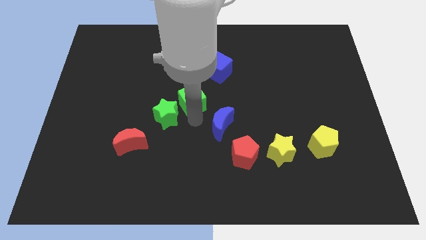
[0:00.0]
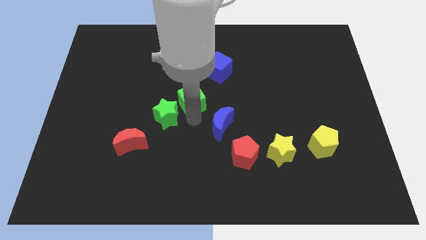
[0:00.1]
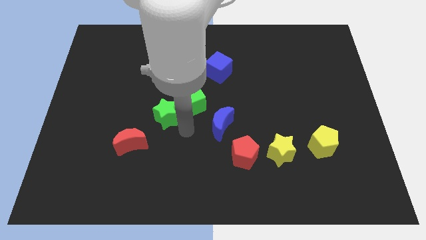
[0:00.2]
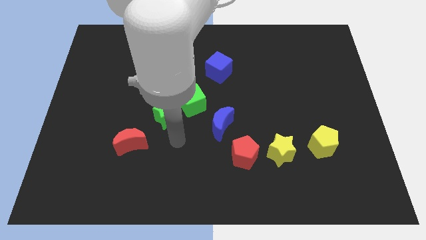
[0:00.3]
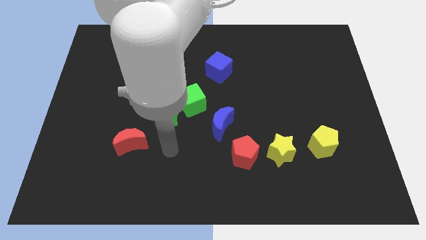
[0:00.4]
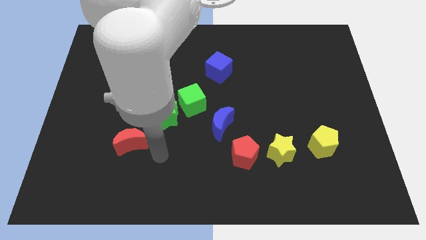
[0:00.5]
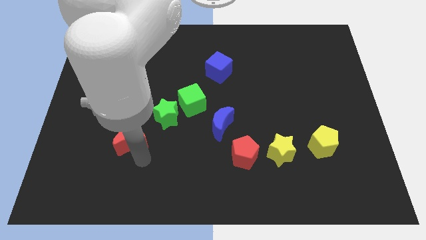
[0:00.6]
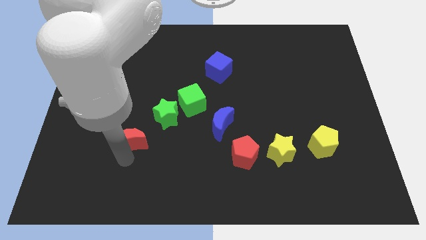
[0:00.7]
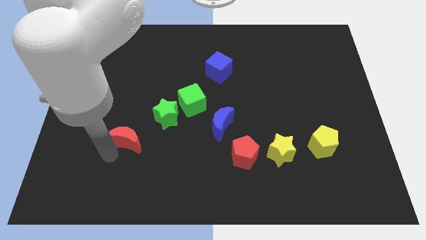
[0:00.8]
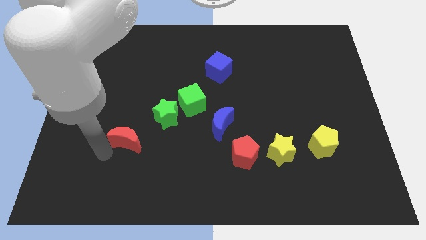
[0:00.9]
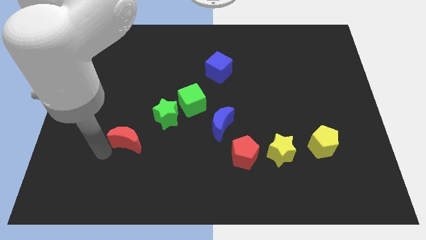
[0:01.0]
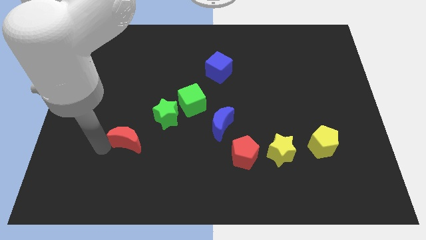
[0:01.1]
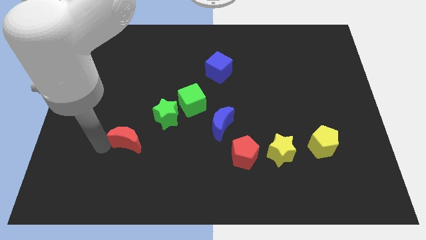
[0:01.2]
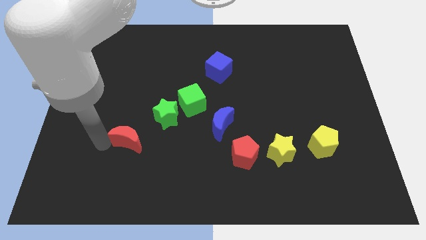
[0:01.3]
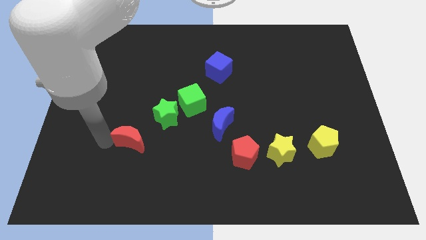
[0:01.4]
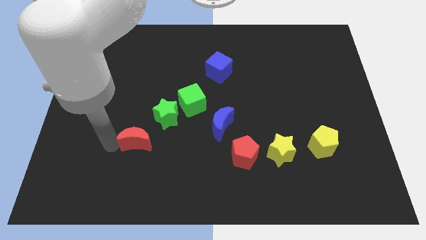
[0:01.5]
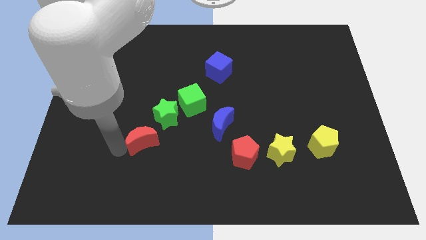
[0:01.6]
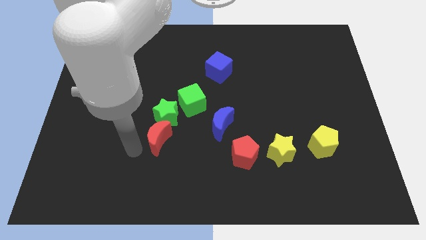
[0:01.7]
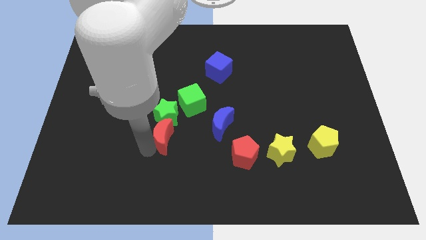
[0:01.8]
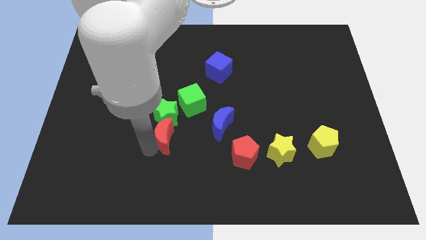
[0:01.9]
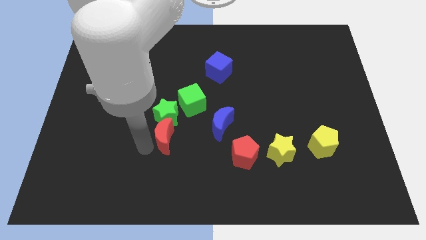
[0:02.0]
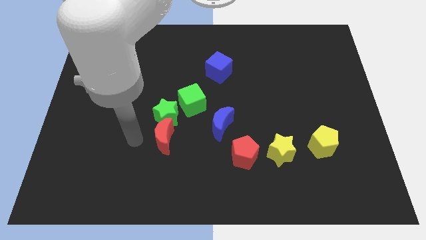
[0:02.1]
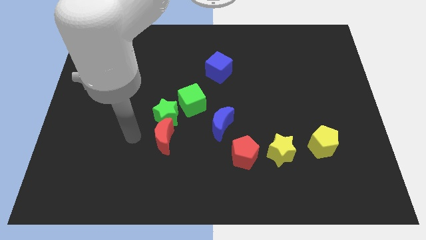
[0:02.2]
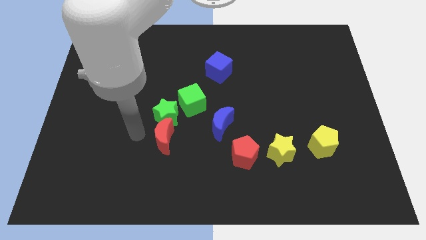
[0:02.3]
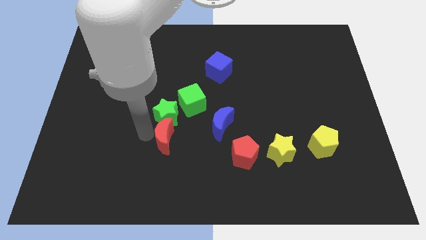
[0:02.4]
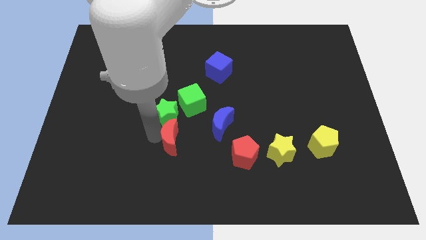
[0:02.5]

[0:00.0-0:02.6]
push the red moon down to the green star

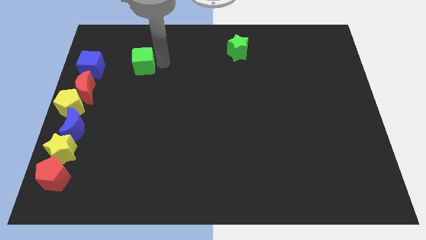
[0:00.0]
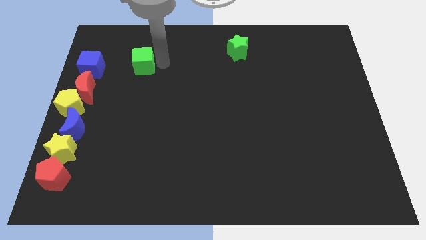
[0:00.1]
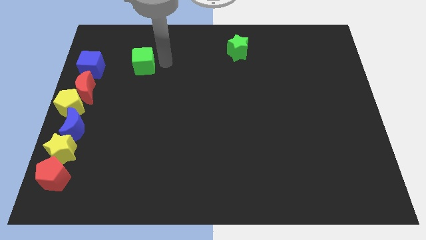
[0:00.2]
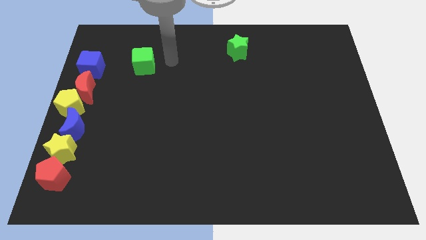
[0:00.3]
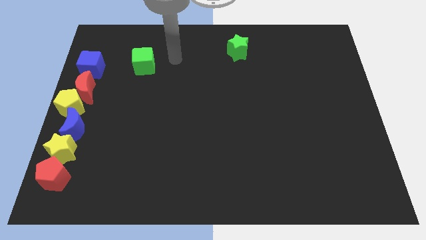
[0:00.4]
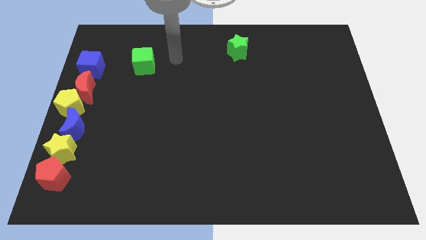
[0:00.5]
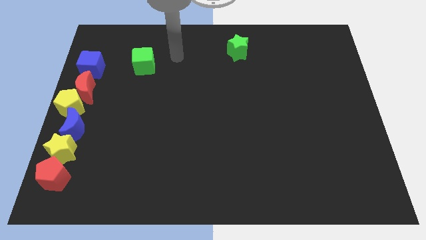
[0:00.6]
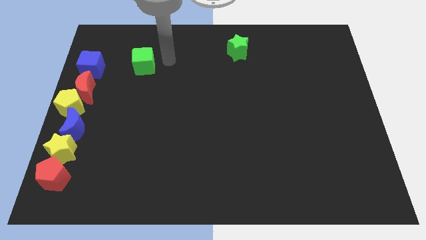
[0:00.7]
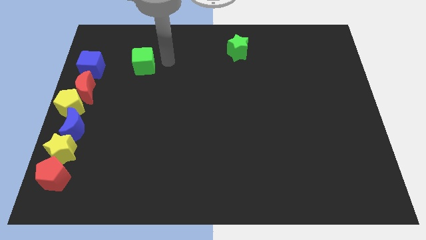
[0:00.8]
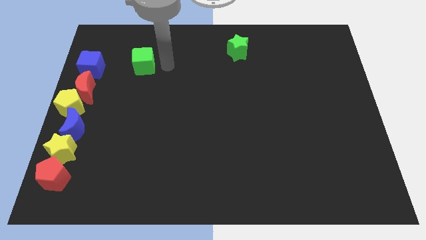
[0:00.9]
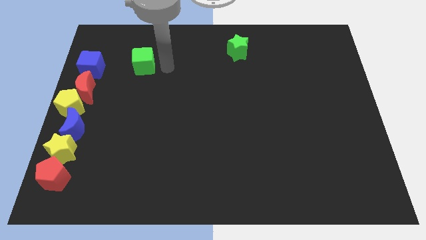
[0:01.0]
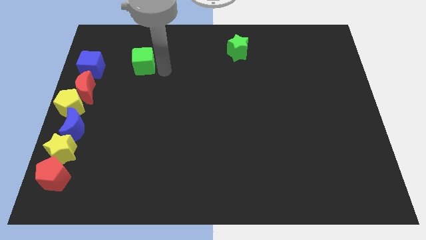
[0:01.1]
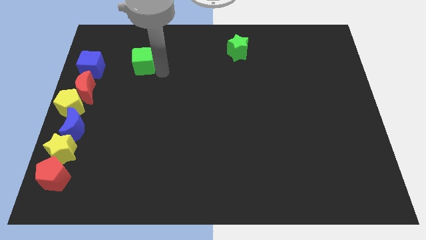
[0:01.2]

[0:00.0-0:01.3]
move the green cube towards the right side of the blue cube

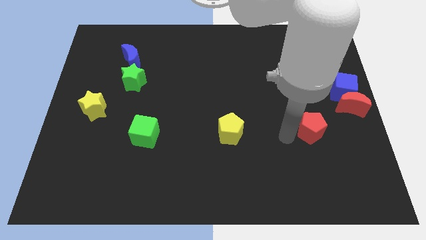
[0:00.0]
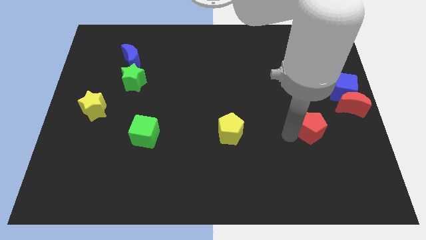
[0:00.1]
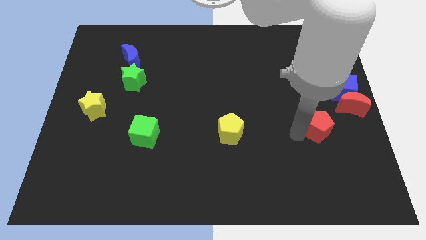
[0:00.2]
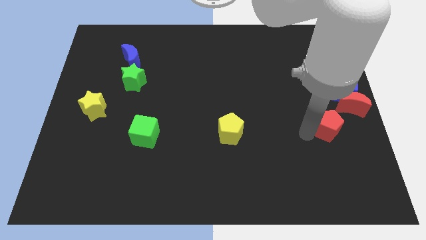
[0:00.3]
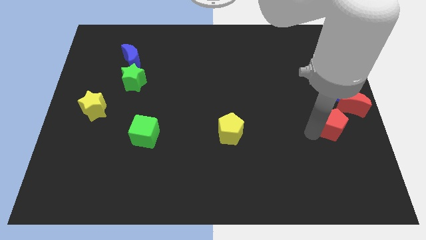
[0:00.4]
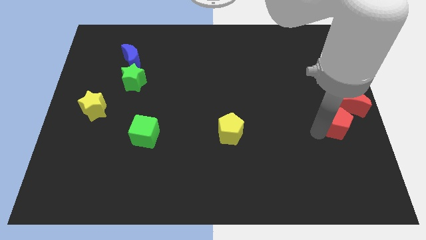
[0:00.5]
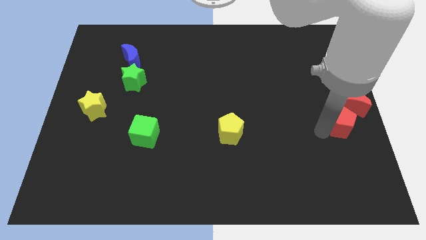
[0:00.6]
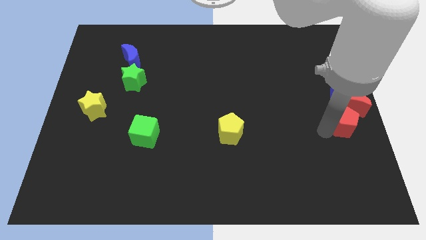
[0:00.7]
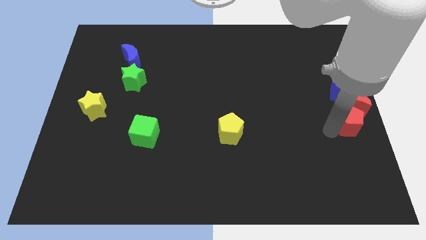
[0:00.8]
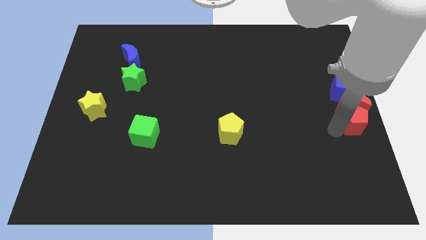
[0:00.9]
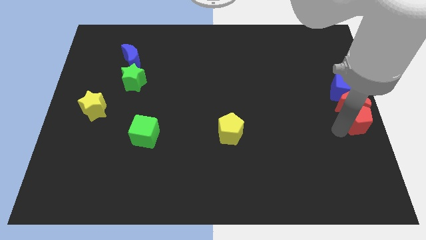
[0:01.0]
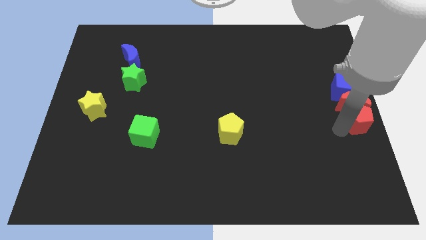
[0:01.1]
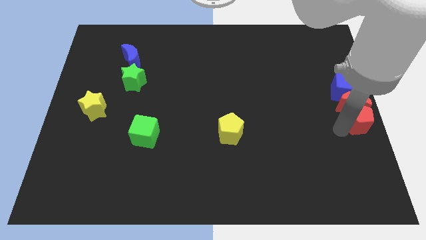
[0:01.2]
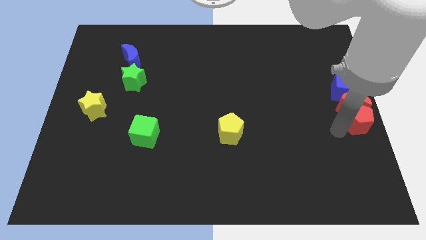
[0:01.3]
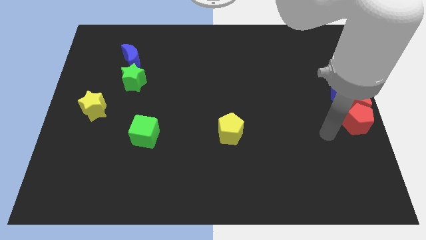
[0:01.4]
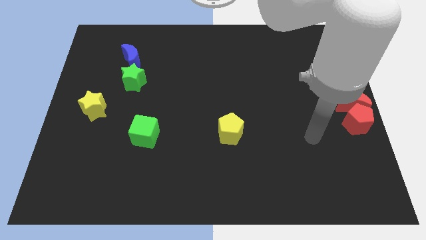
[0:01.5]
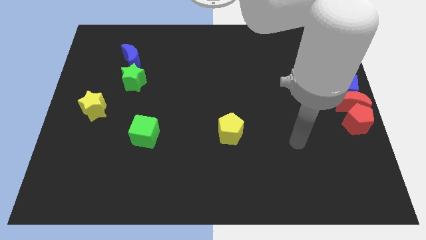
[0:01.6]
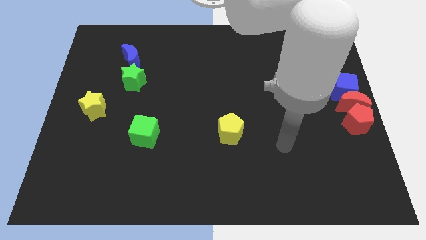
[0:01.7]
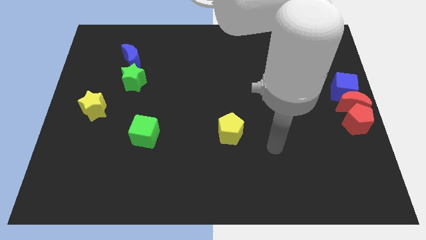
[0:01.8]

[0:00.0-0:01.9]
move the red pentagon into the red crescent

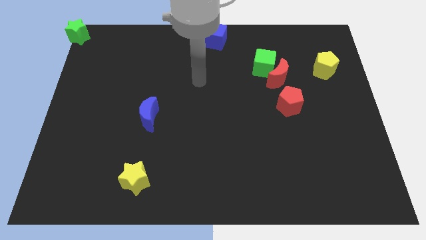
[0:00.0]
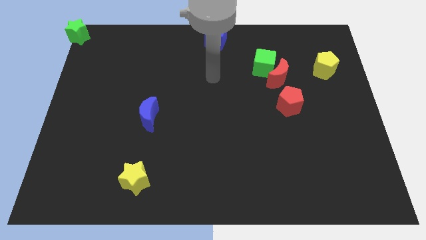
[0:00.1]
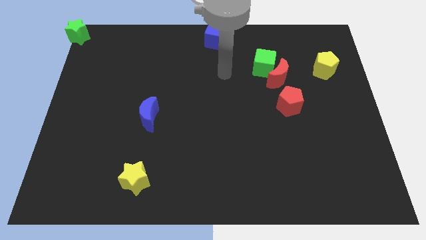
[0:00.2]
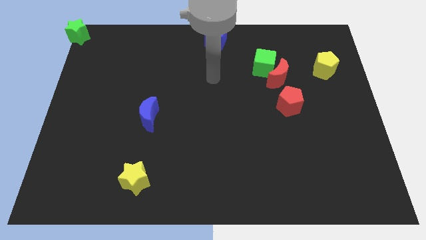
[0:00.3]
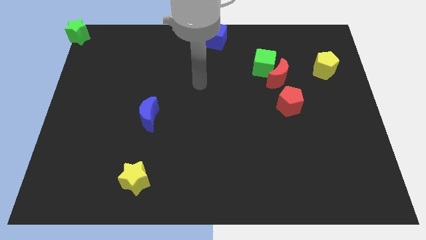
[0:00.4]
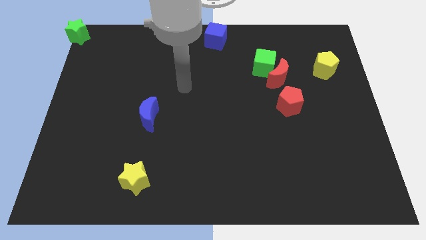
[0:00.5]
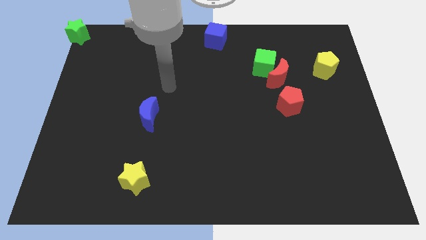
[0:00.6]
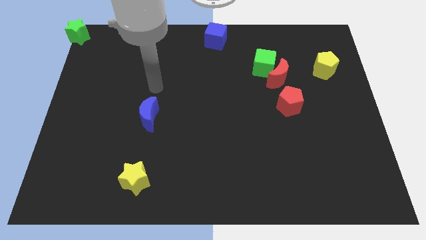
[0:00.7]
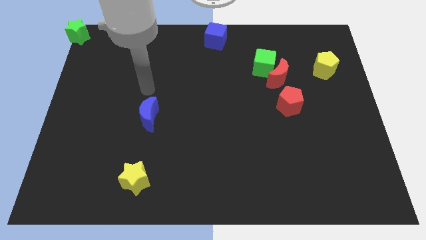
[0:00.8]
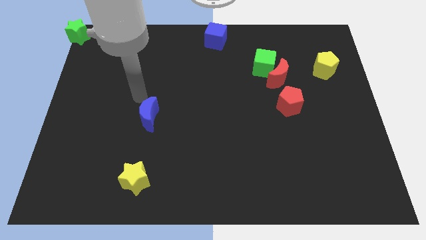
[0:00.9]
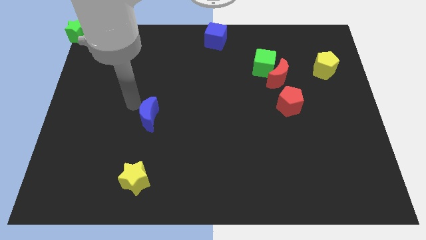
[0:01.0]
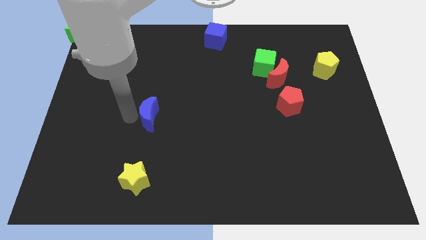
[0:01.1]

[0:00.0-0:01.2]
place your arm at the left of the blue crescent

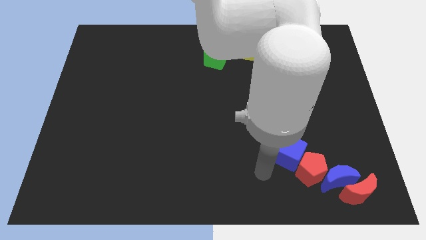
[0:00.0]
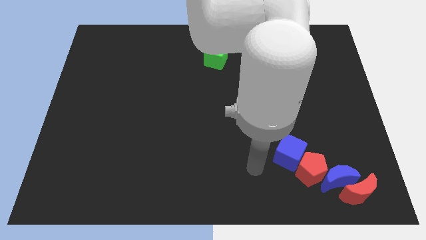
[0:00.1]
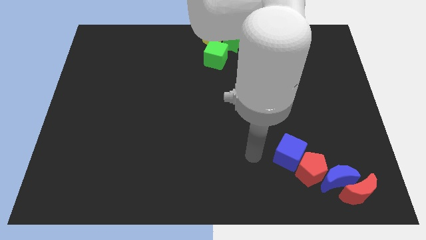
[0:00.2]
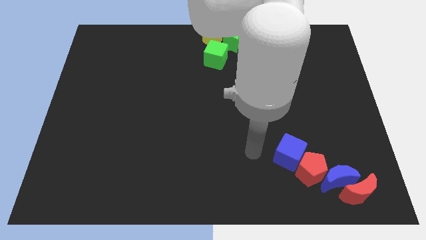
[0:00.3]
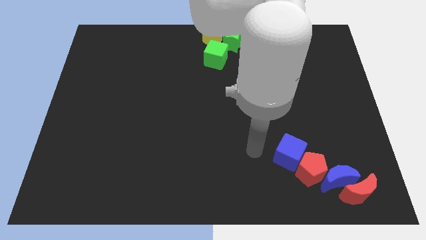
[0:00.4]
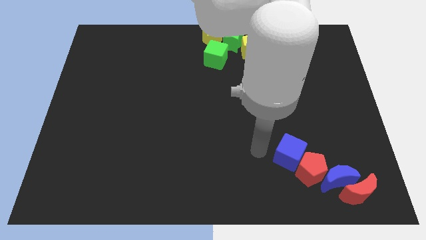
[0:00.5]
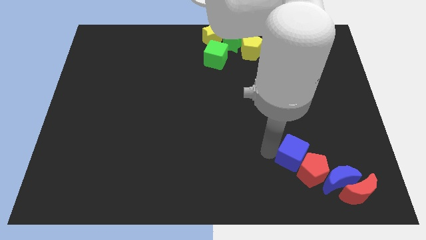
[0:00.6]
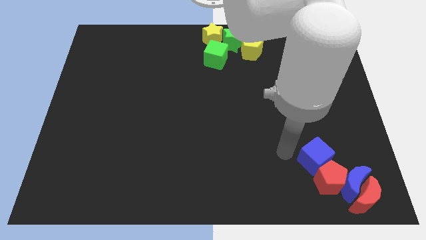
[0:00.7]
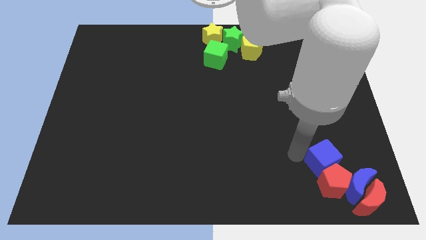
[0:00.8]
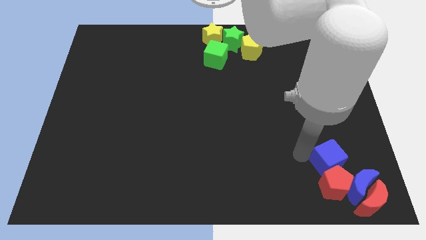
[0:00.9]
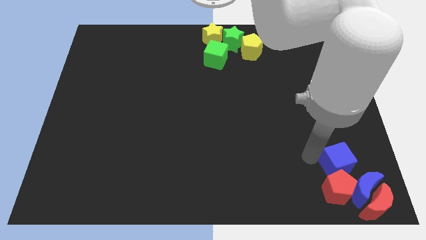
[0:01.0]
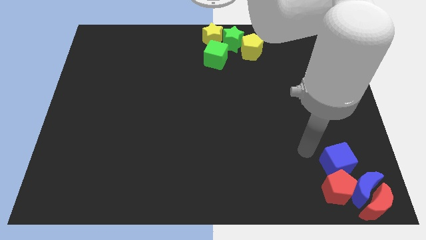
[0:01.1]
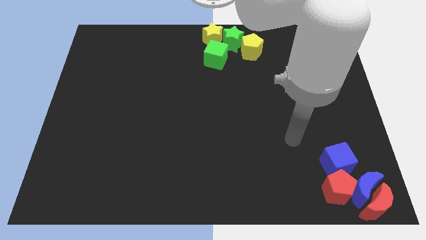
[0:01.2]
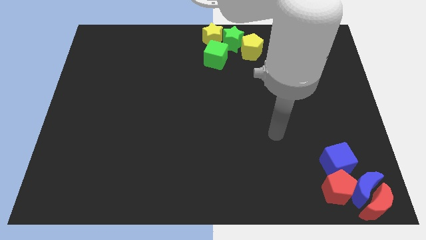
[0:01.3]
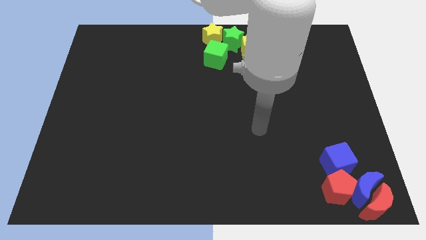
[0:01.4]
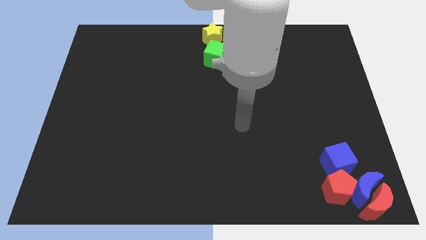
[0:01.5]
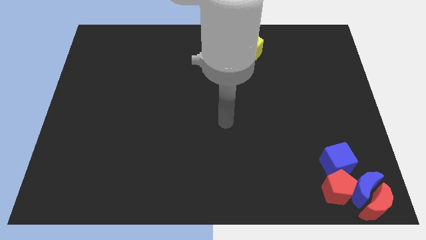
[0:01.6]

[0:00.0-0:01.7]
push the line of blocks to the bottom right corner of the board
